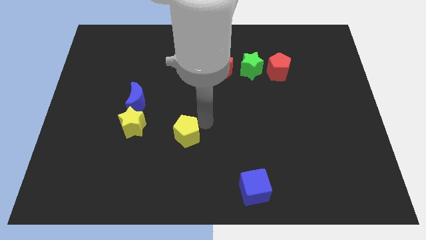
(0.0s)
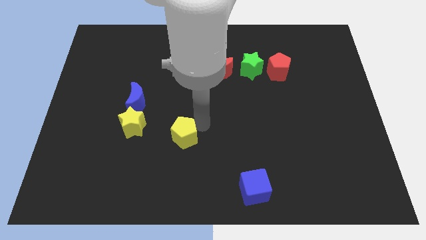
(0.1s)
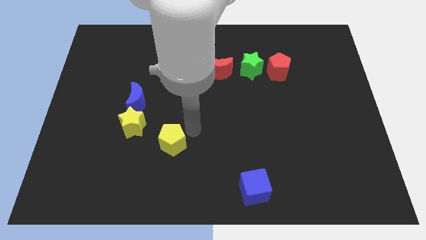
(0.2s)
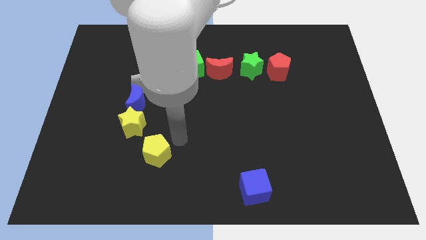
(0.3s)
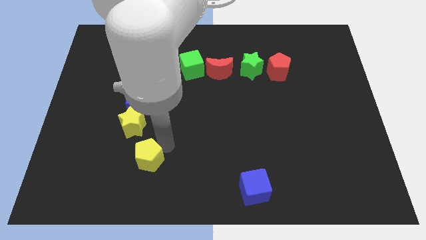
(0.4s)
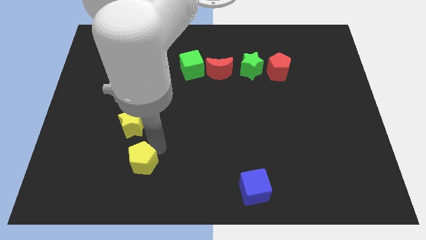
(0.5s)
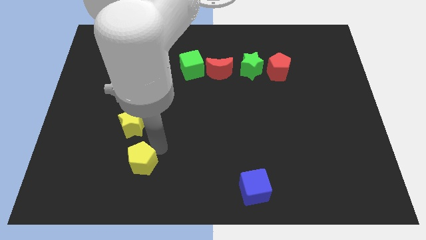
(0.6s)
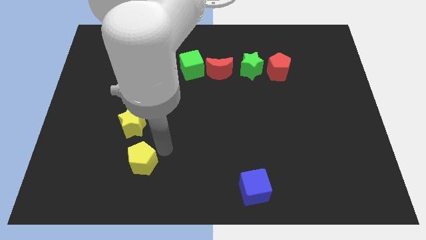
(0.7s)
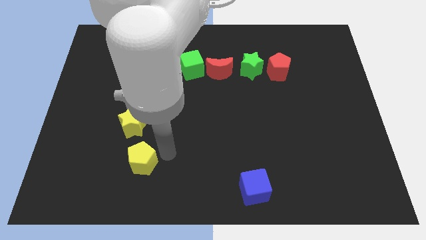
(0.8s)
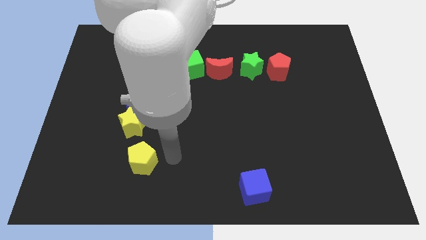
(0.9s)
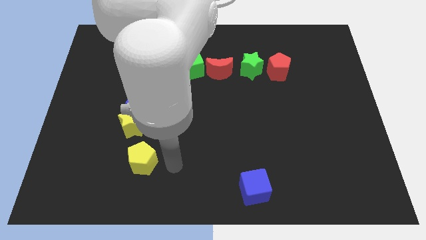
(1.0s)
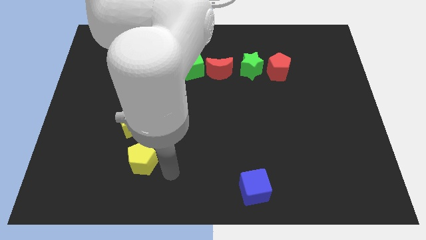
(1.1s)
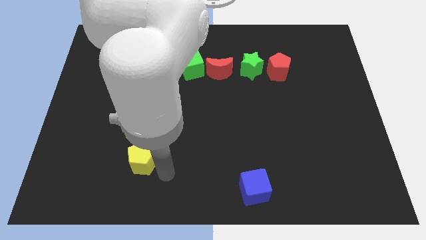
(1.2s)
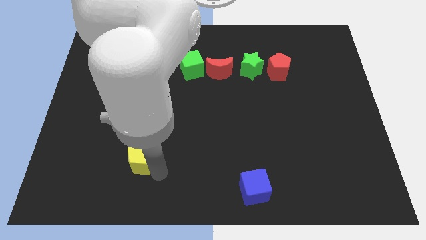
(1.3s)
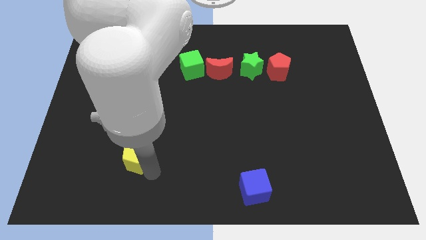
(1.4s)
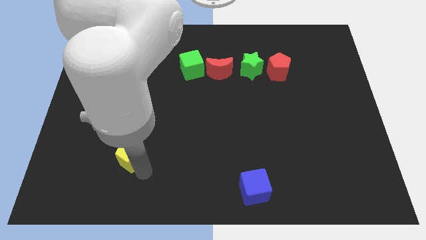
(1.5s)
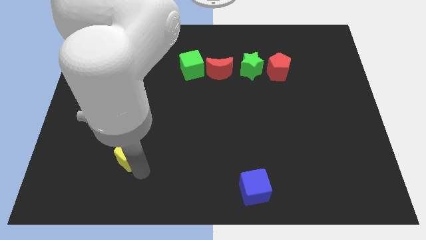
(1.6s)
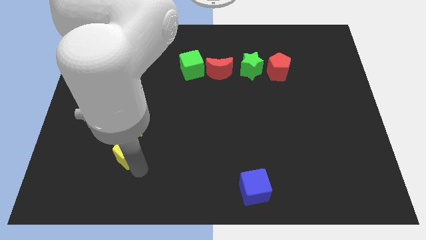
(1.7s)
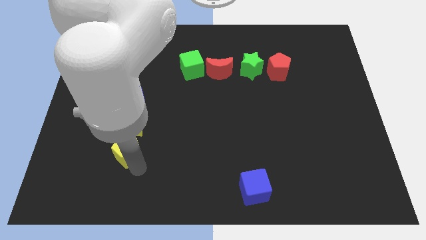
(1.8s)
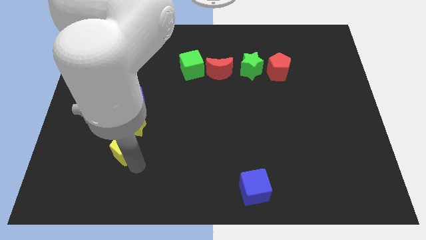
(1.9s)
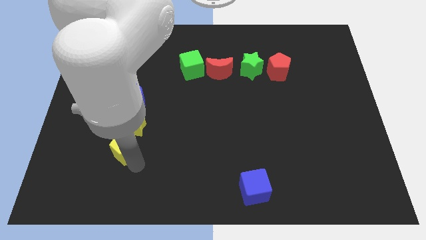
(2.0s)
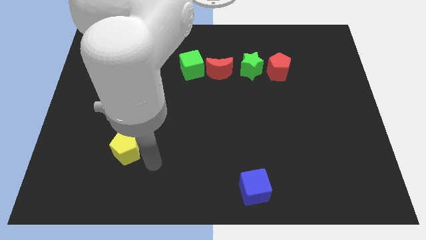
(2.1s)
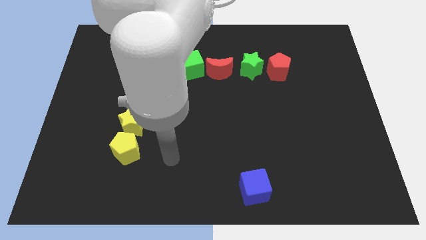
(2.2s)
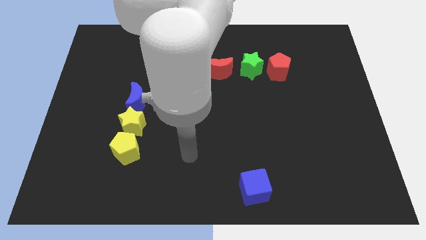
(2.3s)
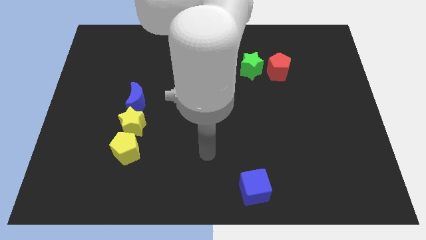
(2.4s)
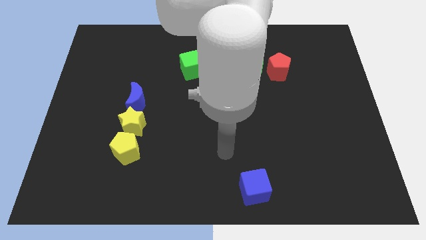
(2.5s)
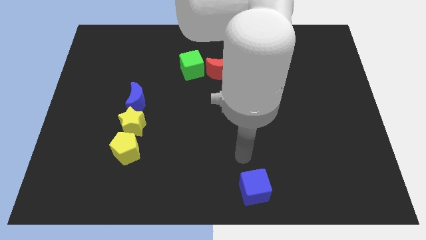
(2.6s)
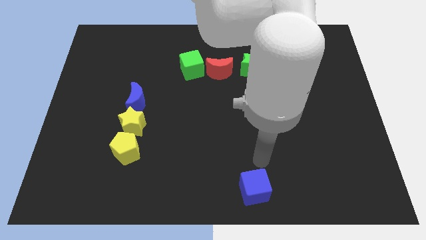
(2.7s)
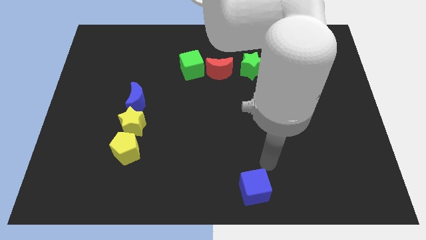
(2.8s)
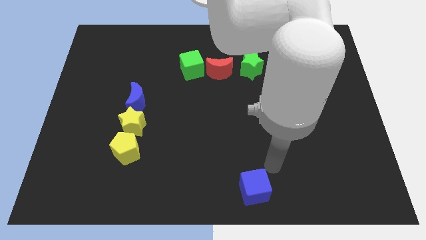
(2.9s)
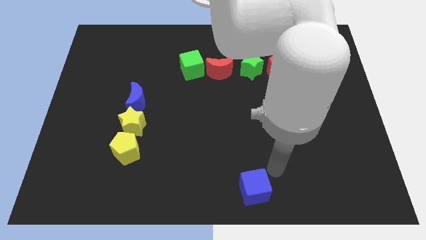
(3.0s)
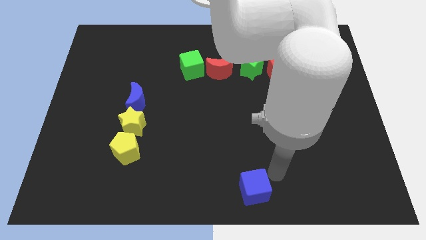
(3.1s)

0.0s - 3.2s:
place the yellow pentagon to the bottom side of the yellow star

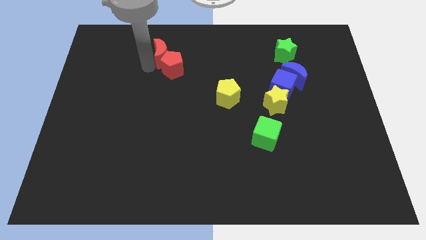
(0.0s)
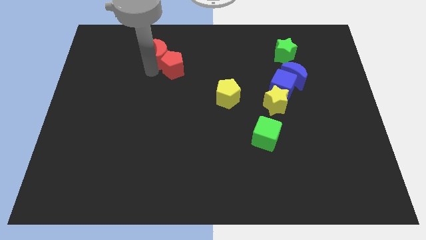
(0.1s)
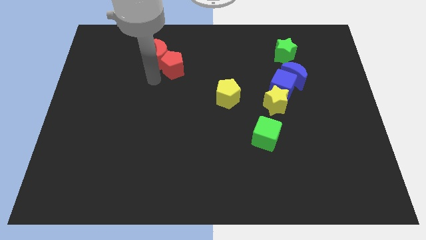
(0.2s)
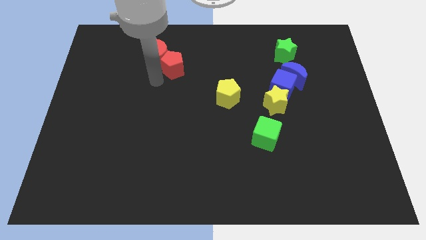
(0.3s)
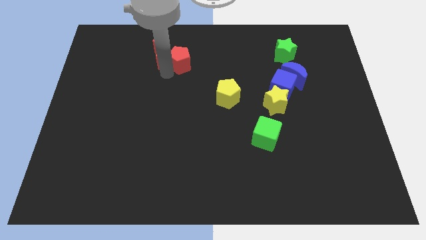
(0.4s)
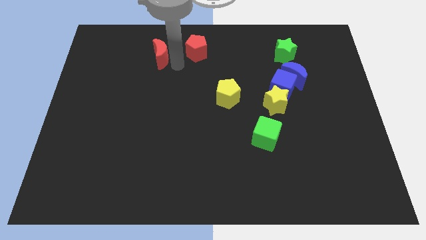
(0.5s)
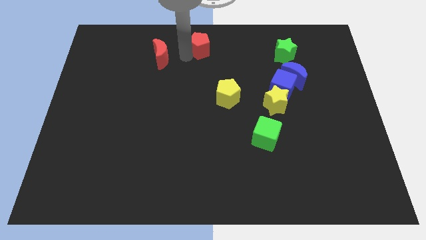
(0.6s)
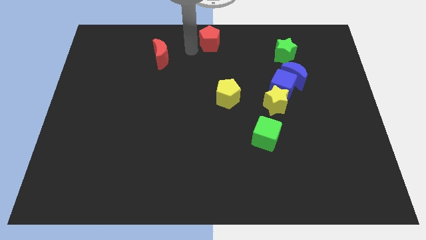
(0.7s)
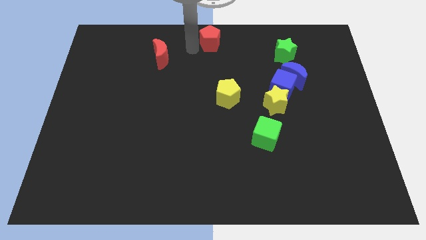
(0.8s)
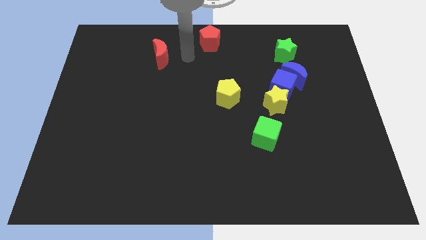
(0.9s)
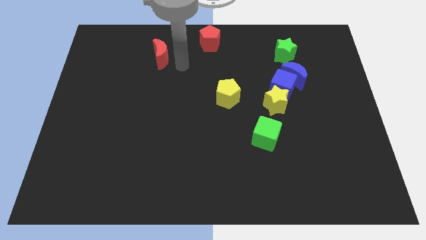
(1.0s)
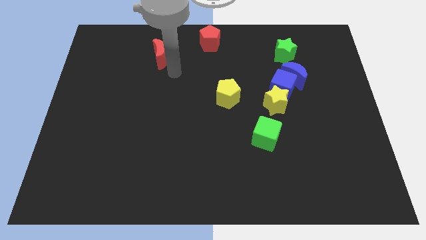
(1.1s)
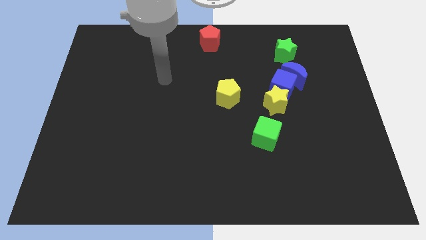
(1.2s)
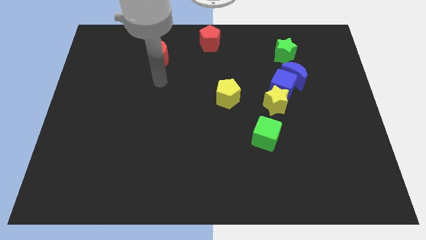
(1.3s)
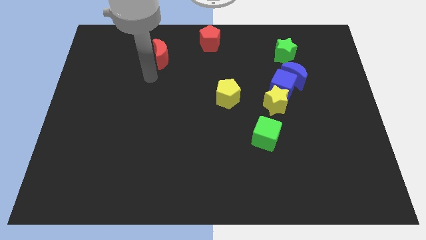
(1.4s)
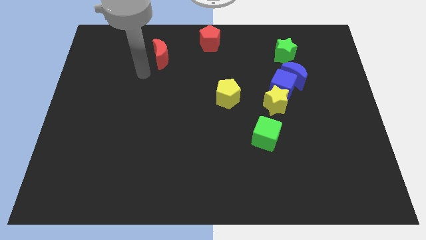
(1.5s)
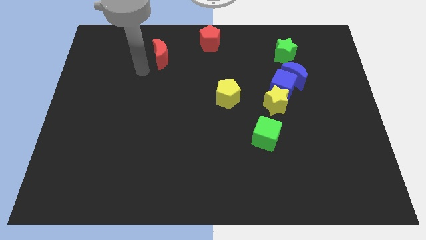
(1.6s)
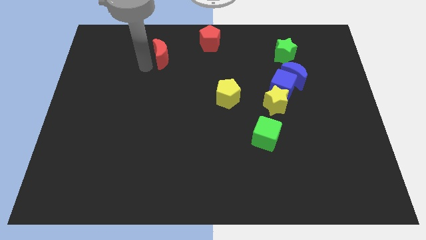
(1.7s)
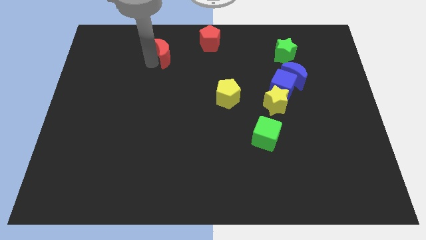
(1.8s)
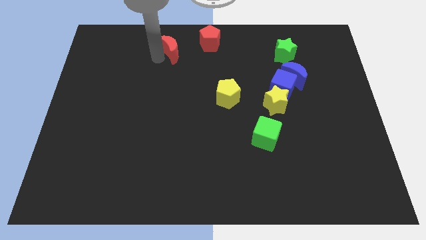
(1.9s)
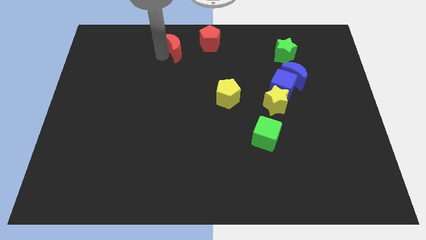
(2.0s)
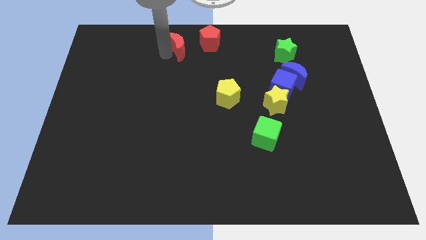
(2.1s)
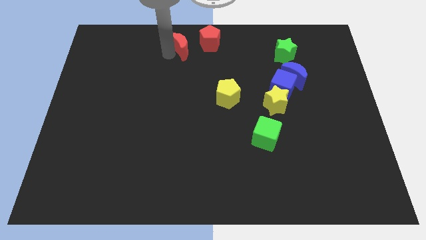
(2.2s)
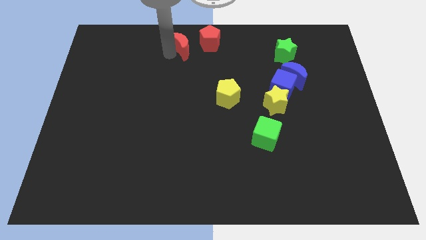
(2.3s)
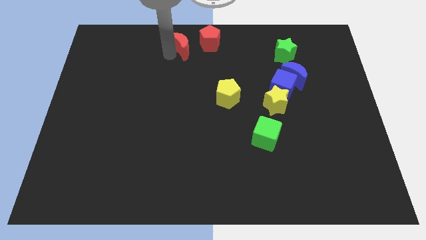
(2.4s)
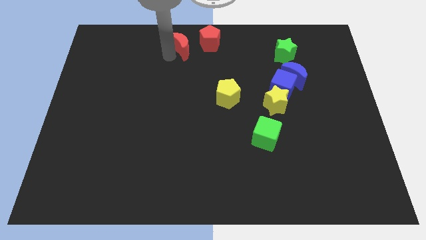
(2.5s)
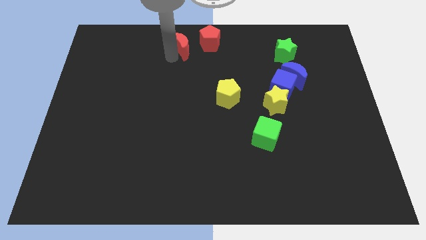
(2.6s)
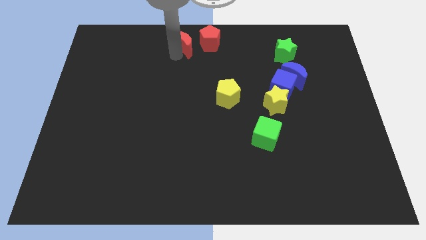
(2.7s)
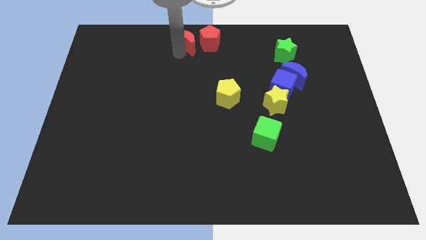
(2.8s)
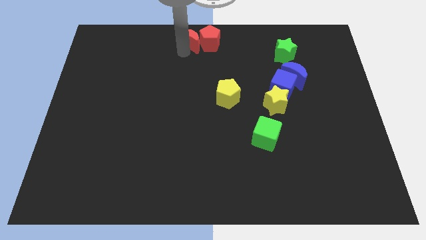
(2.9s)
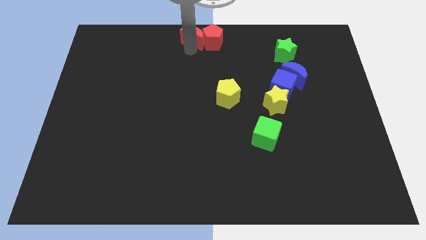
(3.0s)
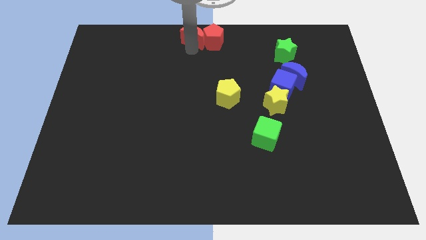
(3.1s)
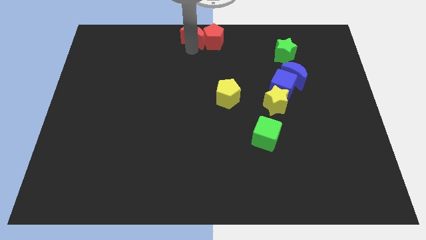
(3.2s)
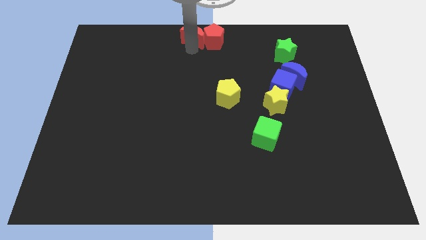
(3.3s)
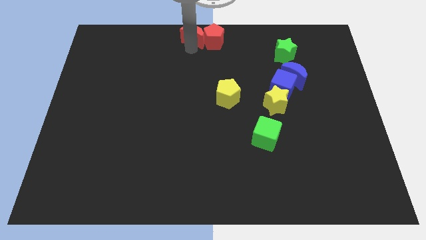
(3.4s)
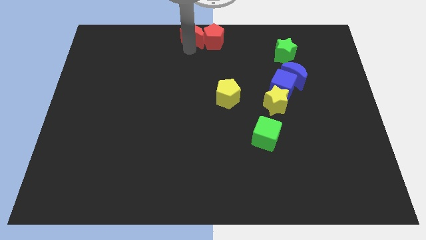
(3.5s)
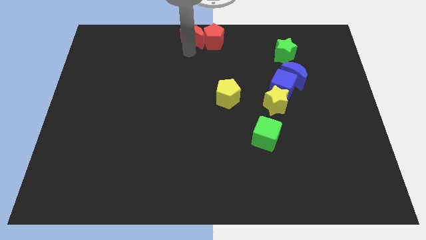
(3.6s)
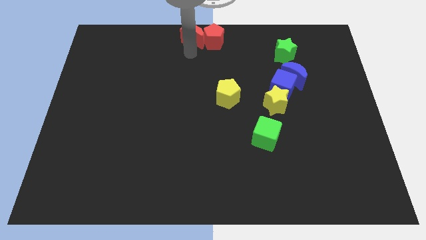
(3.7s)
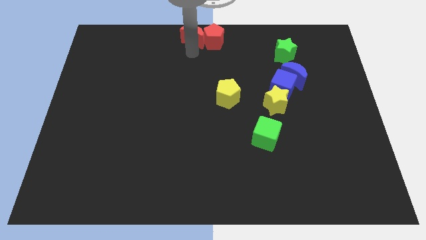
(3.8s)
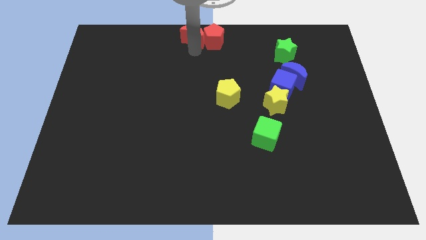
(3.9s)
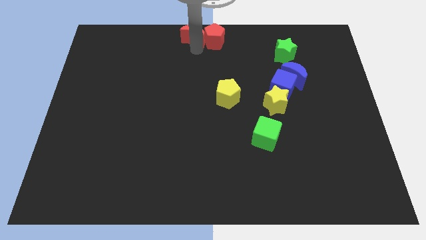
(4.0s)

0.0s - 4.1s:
move the group of red blocks at the top center of the board

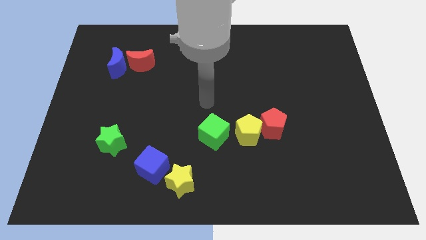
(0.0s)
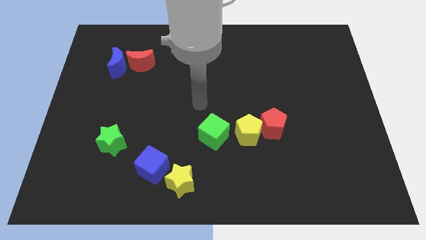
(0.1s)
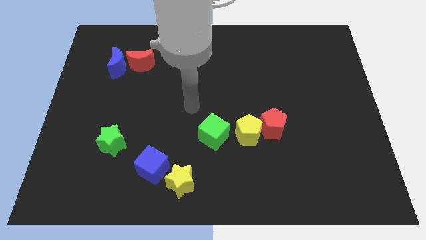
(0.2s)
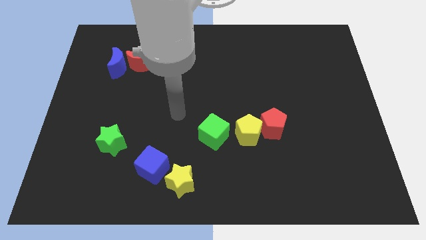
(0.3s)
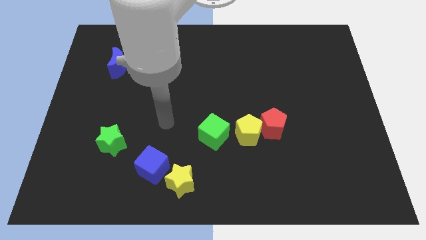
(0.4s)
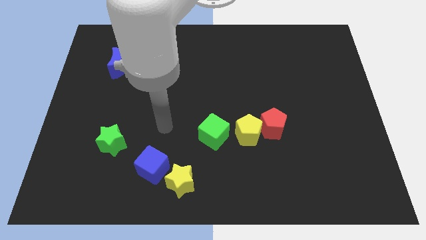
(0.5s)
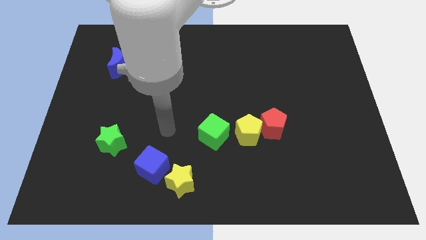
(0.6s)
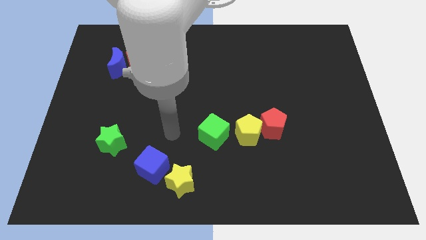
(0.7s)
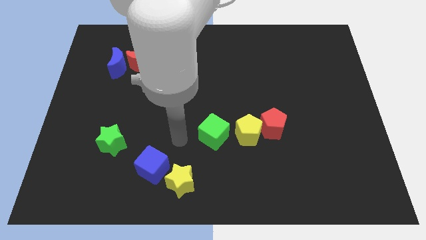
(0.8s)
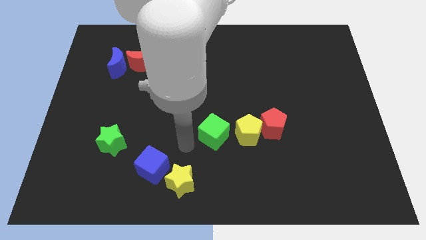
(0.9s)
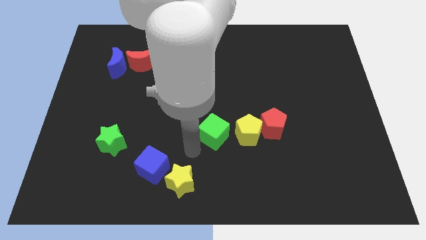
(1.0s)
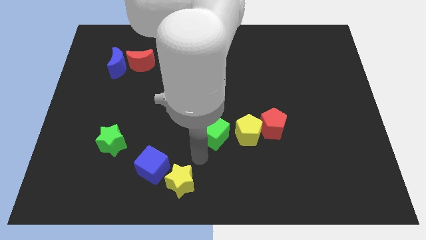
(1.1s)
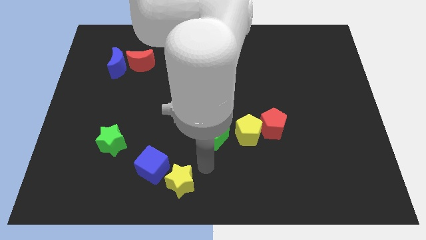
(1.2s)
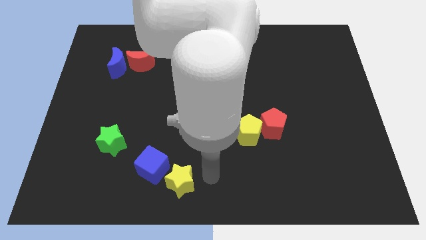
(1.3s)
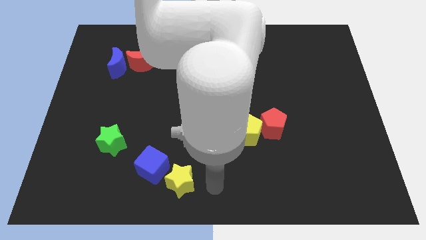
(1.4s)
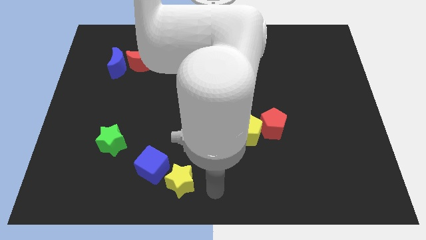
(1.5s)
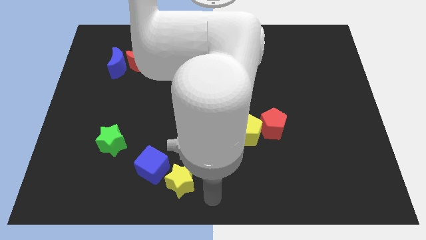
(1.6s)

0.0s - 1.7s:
drag the pointer towards the bottom center of the board
